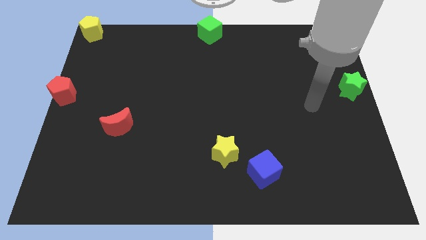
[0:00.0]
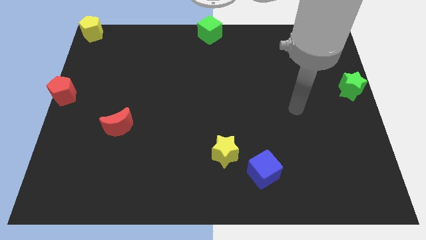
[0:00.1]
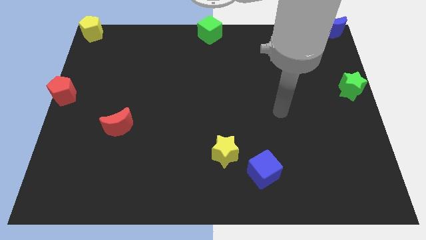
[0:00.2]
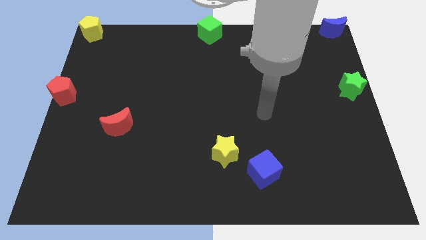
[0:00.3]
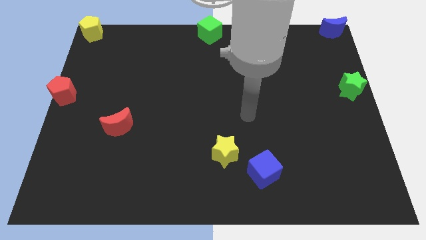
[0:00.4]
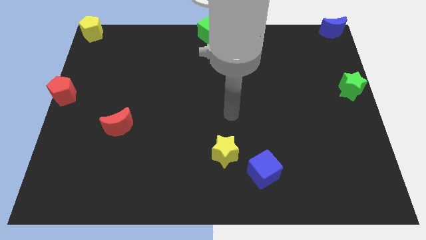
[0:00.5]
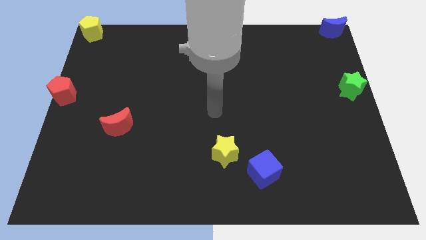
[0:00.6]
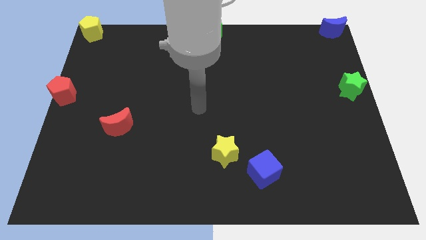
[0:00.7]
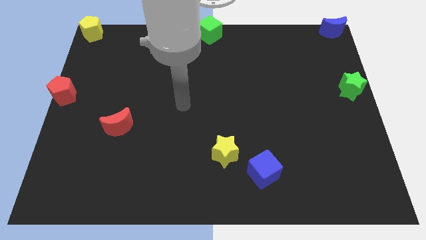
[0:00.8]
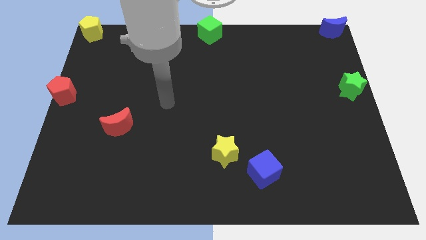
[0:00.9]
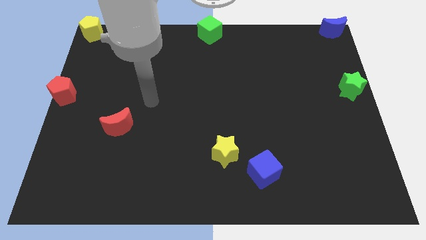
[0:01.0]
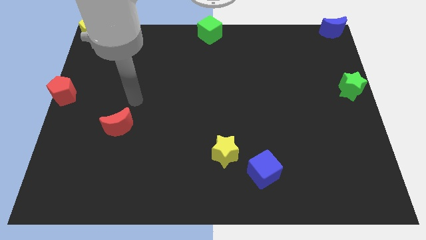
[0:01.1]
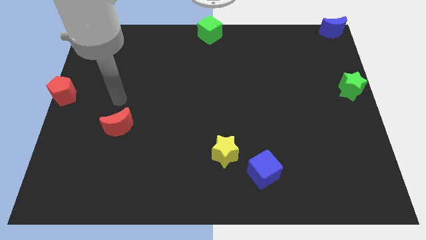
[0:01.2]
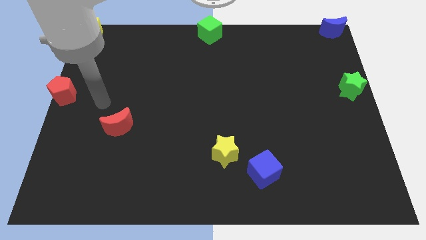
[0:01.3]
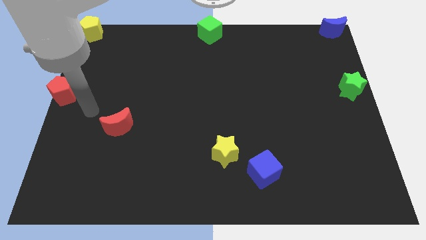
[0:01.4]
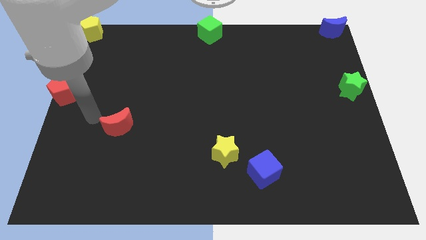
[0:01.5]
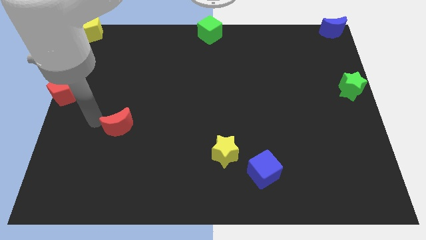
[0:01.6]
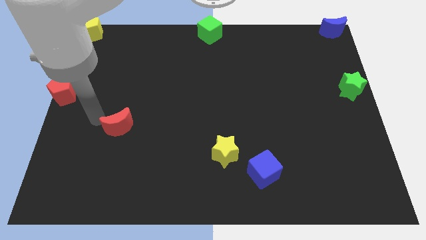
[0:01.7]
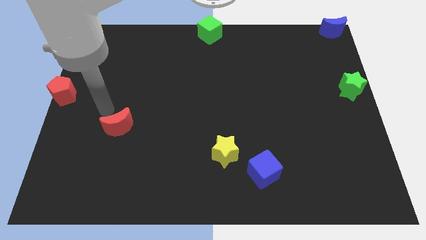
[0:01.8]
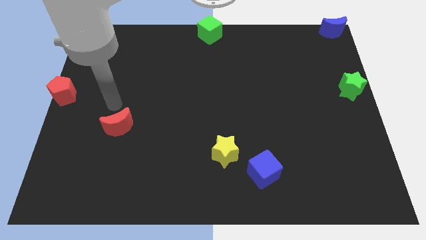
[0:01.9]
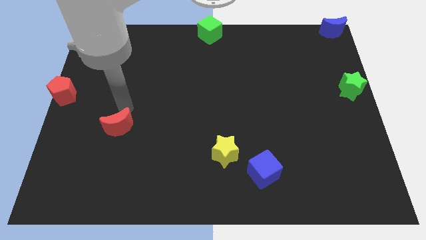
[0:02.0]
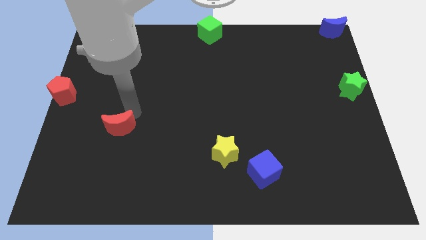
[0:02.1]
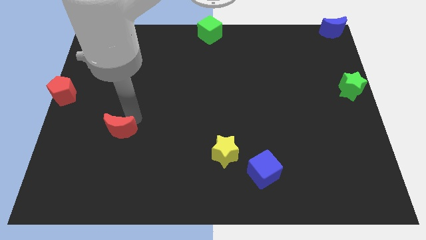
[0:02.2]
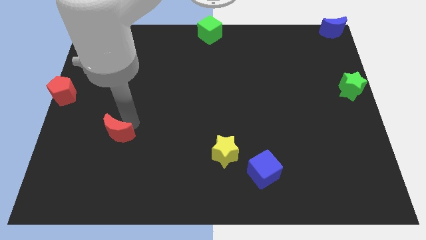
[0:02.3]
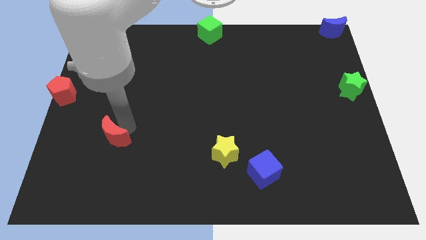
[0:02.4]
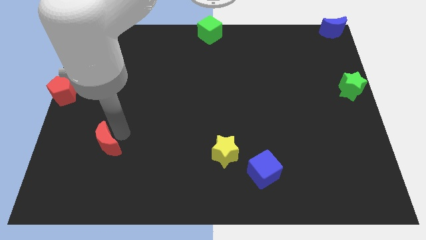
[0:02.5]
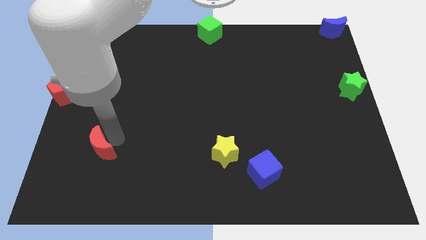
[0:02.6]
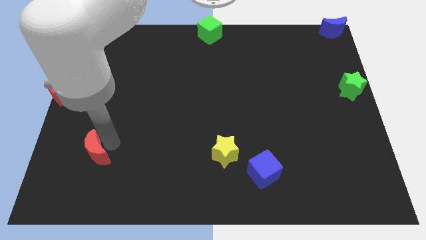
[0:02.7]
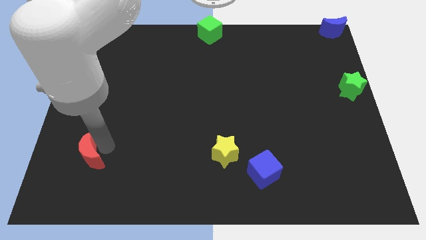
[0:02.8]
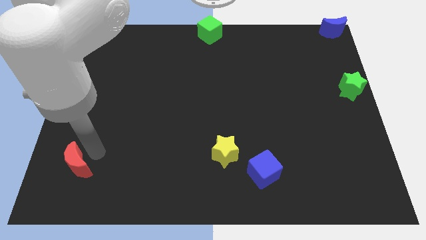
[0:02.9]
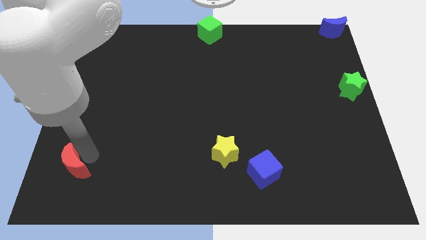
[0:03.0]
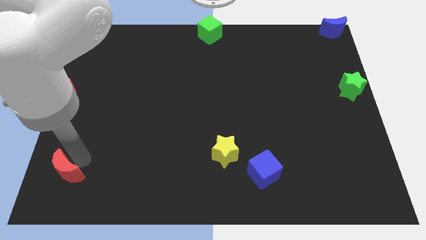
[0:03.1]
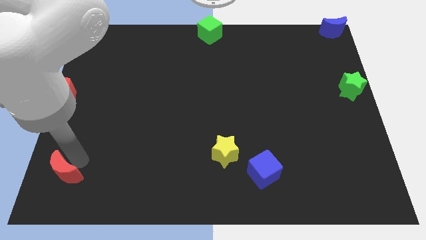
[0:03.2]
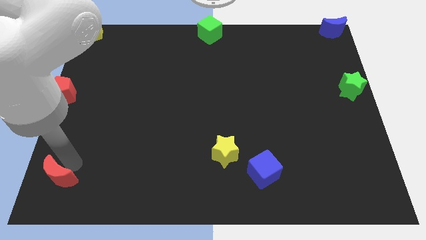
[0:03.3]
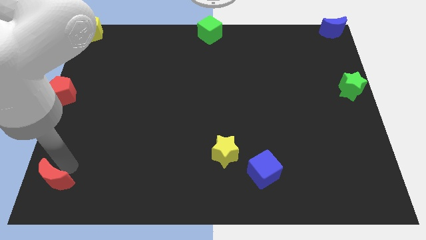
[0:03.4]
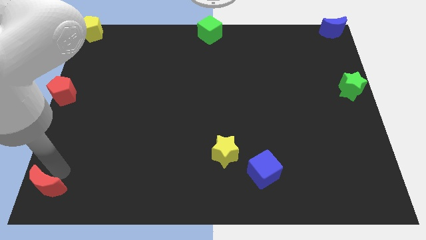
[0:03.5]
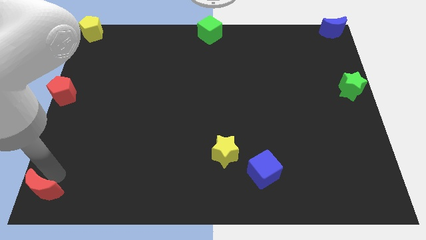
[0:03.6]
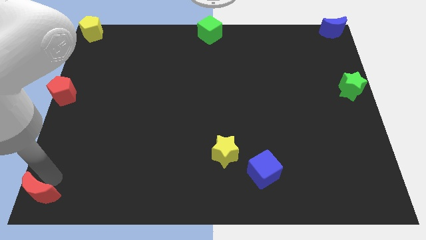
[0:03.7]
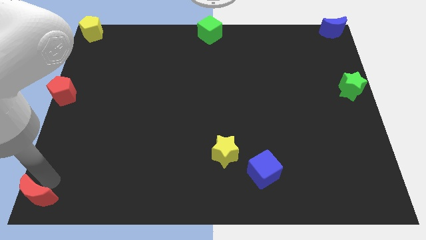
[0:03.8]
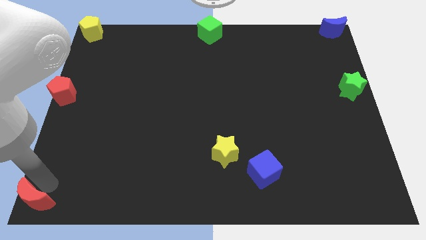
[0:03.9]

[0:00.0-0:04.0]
put the red moon vertically below the red pentagon

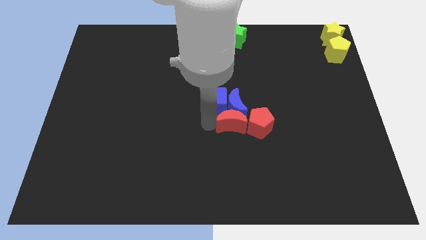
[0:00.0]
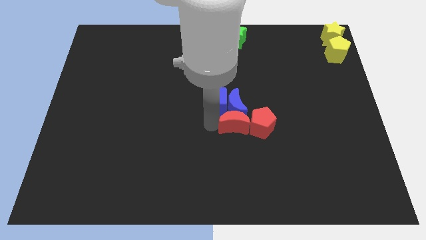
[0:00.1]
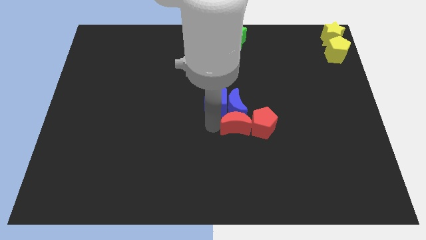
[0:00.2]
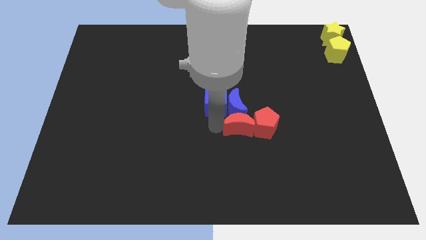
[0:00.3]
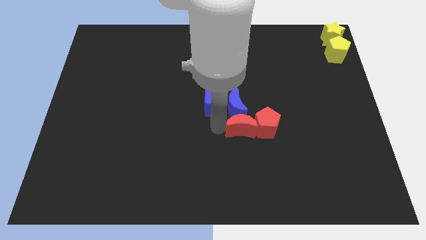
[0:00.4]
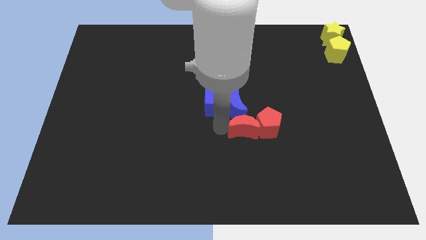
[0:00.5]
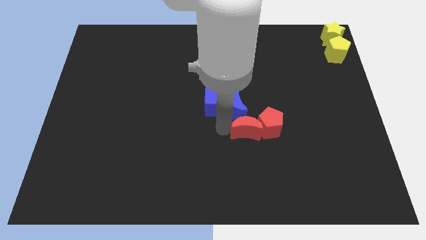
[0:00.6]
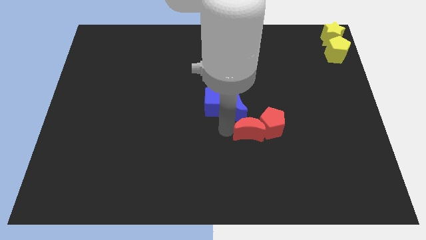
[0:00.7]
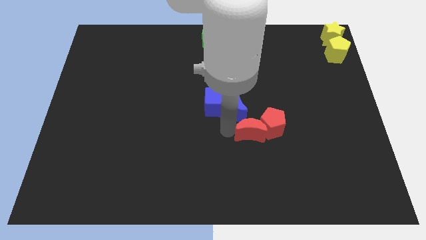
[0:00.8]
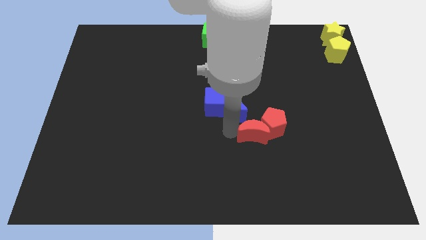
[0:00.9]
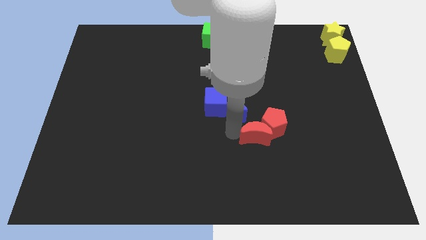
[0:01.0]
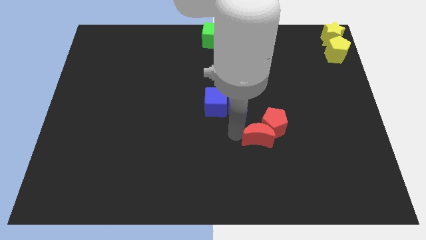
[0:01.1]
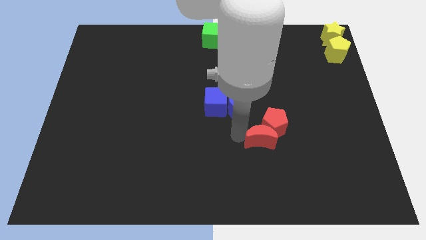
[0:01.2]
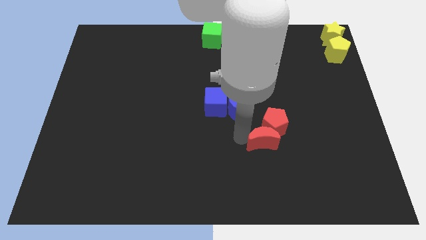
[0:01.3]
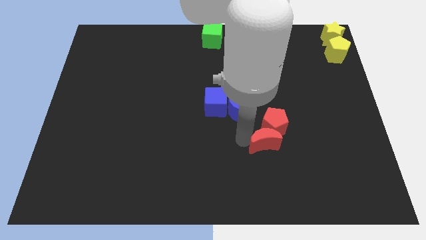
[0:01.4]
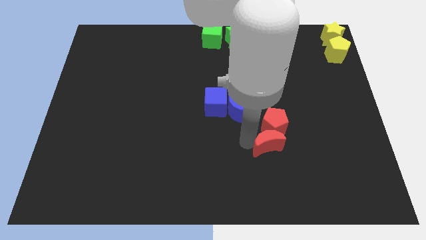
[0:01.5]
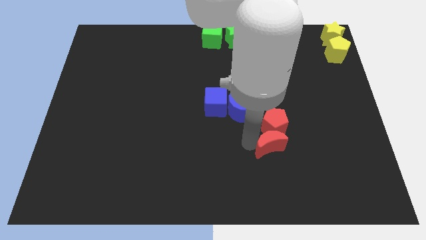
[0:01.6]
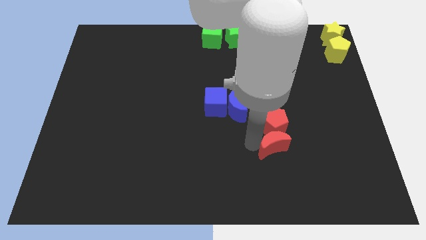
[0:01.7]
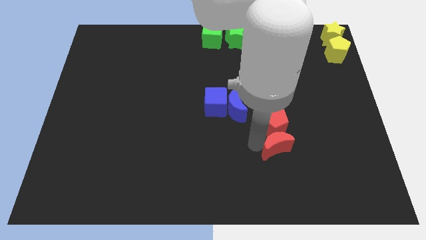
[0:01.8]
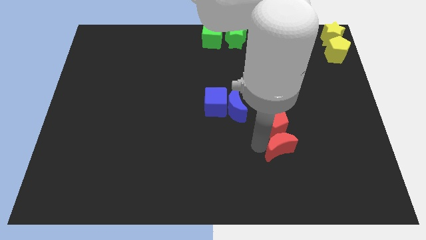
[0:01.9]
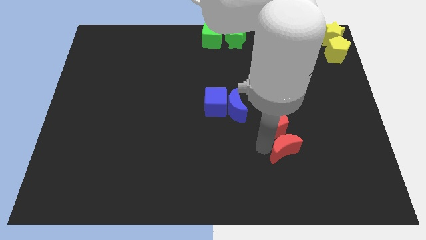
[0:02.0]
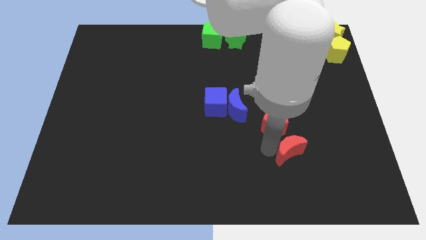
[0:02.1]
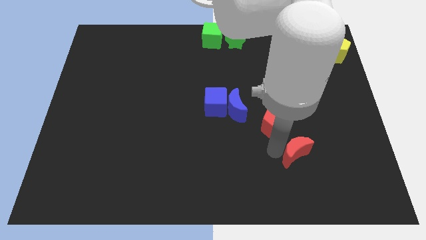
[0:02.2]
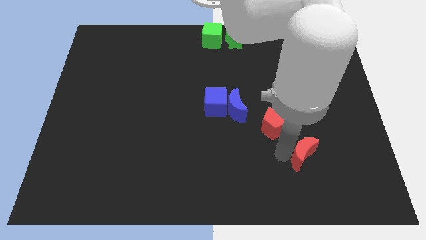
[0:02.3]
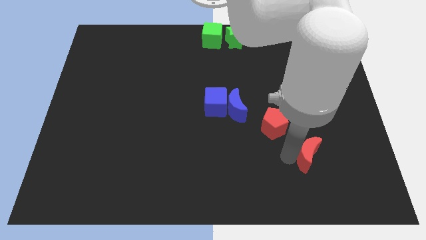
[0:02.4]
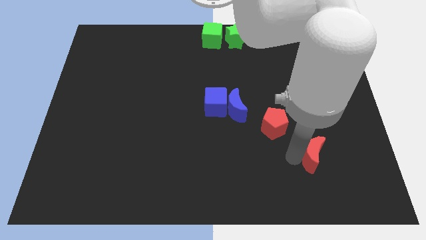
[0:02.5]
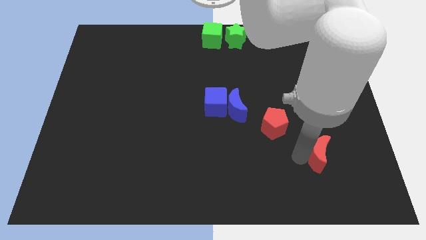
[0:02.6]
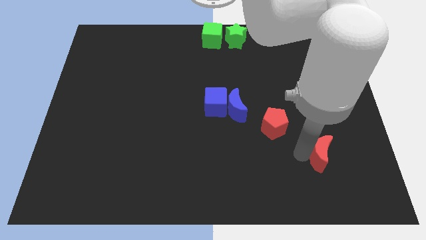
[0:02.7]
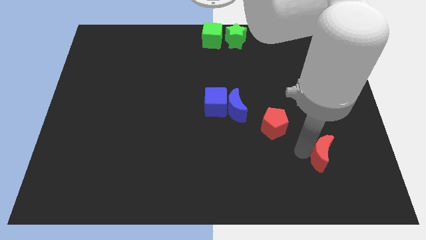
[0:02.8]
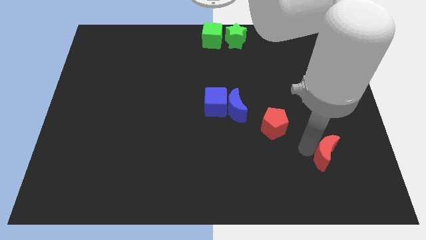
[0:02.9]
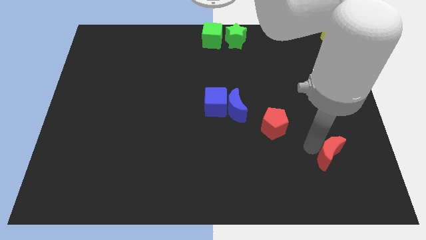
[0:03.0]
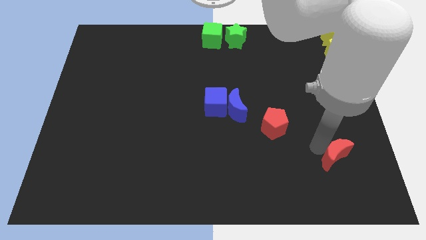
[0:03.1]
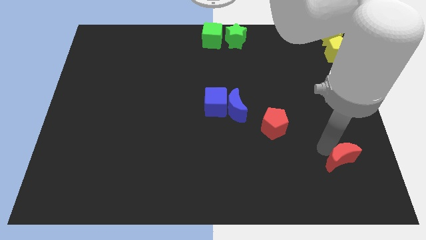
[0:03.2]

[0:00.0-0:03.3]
drag red moon diagonally towards the bottom right corner

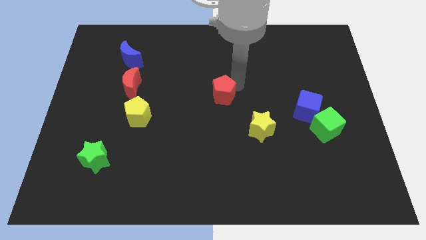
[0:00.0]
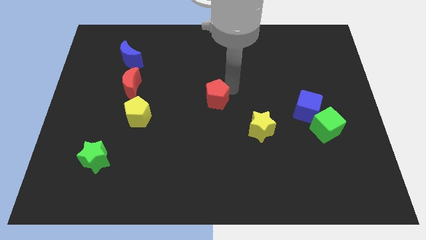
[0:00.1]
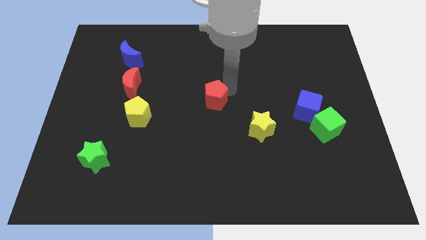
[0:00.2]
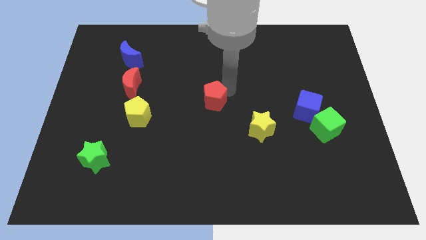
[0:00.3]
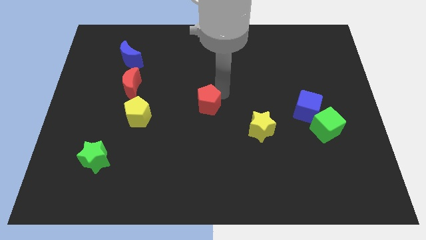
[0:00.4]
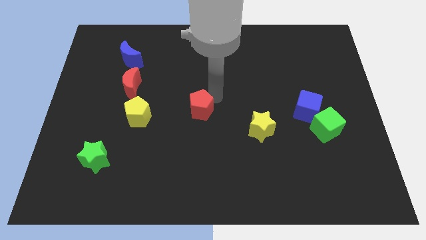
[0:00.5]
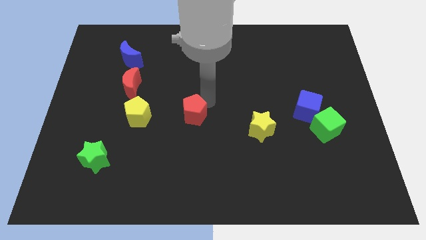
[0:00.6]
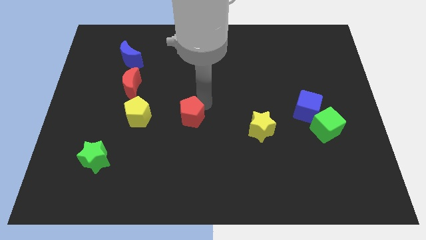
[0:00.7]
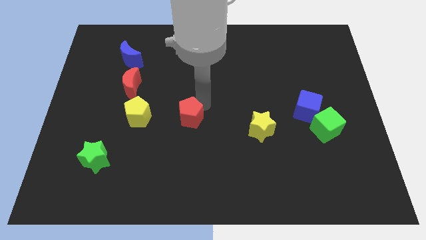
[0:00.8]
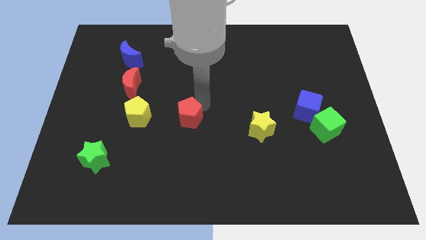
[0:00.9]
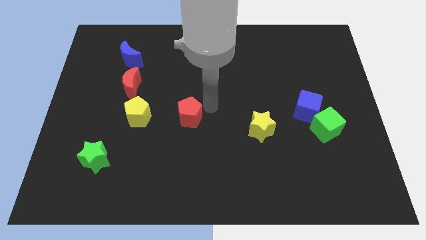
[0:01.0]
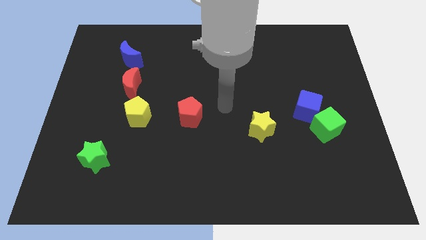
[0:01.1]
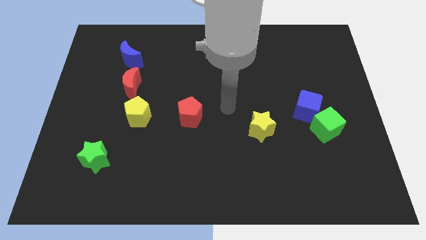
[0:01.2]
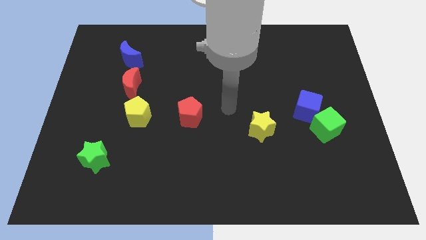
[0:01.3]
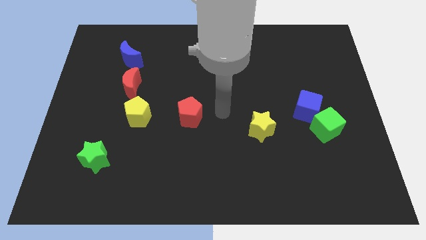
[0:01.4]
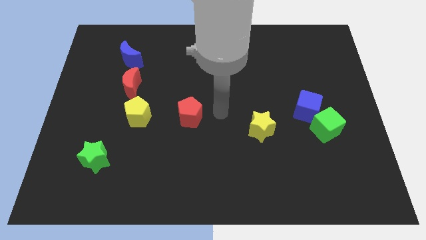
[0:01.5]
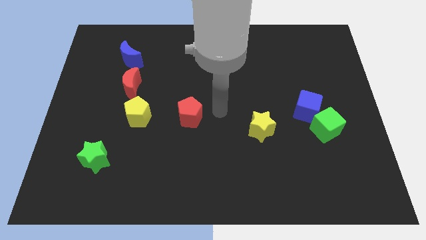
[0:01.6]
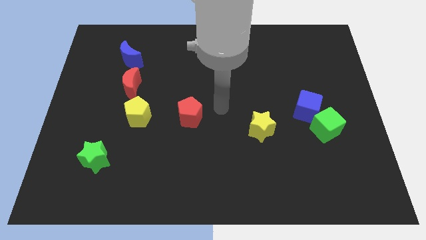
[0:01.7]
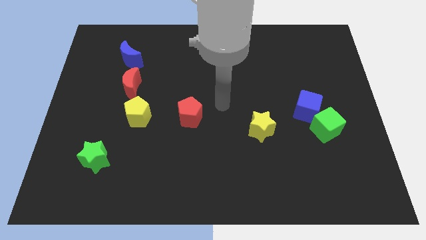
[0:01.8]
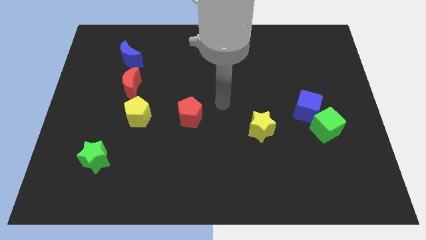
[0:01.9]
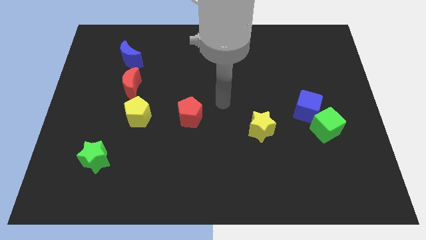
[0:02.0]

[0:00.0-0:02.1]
move red pentagon to the right of yellow pentagon
